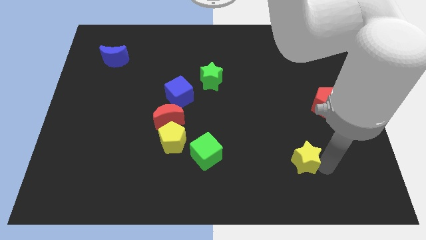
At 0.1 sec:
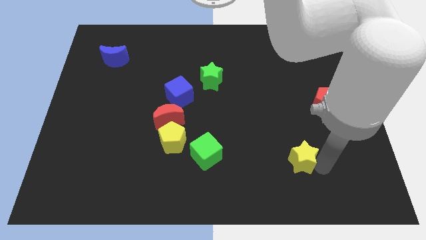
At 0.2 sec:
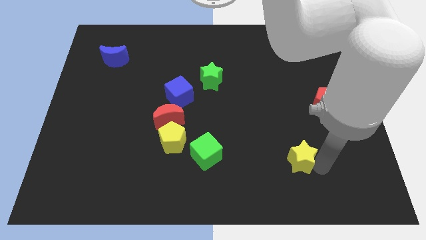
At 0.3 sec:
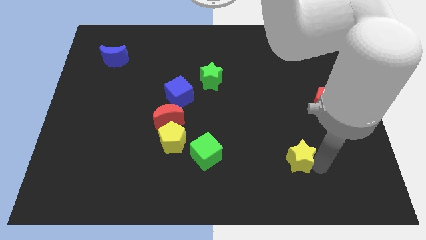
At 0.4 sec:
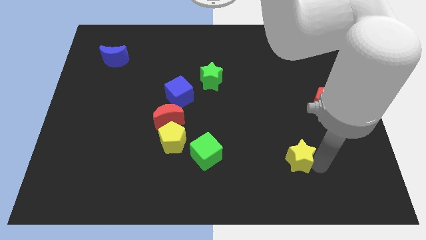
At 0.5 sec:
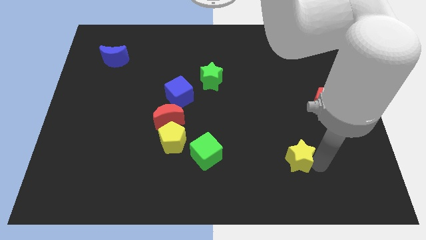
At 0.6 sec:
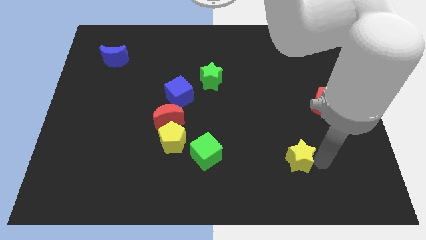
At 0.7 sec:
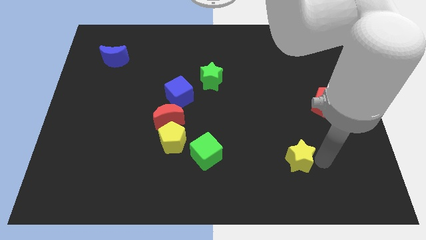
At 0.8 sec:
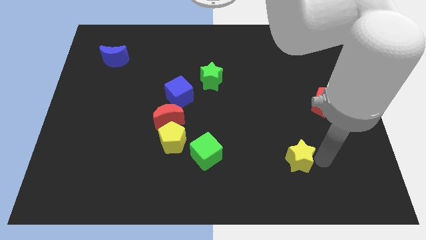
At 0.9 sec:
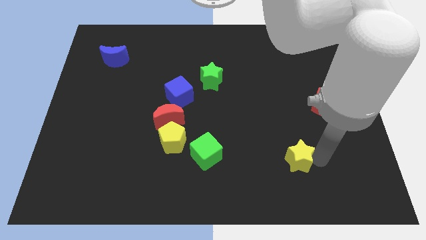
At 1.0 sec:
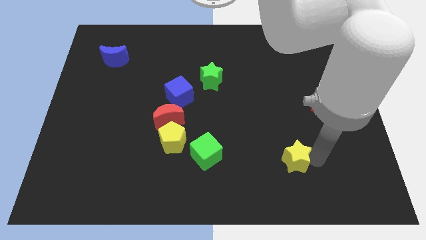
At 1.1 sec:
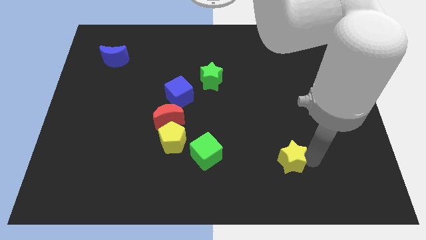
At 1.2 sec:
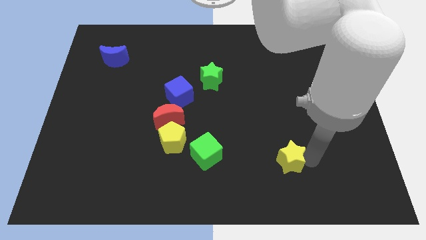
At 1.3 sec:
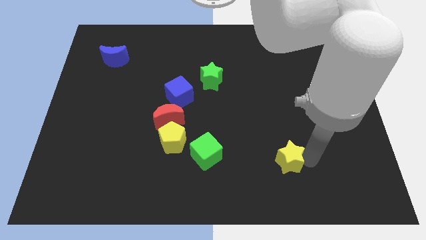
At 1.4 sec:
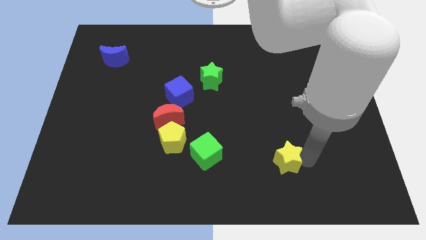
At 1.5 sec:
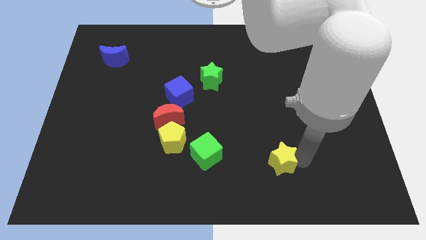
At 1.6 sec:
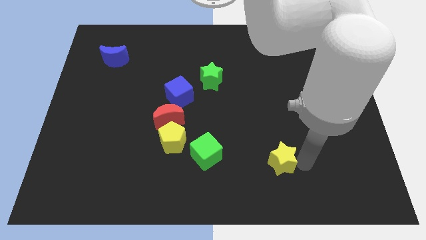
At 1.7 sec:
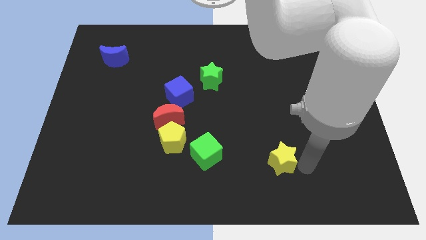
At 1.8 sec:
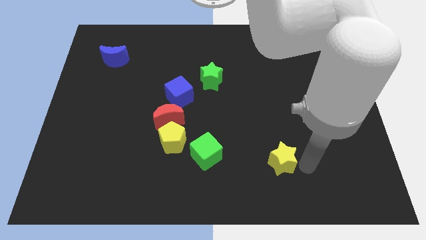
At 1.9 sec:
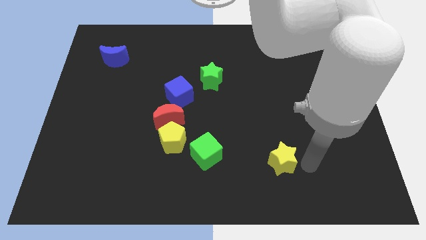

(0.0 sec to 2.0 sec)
drag the yellow star towards the green cube

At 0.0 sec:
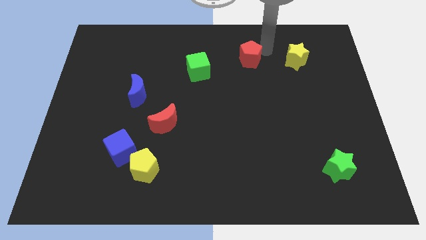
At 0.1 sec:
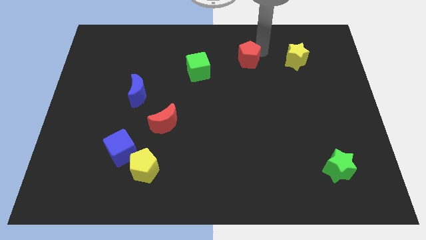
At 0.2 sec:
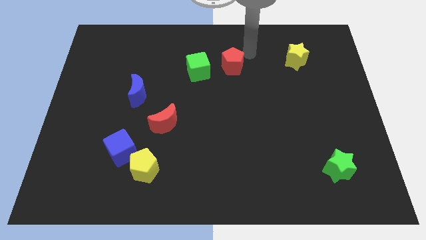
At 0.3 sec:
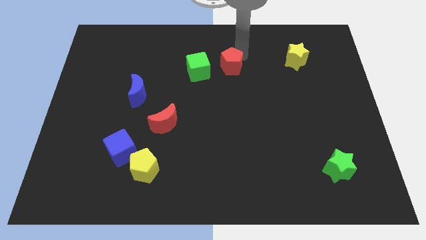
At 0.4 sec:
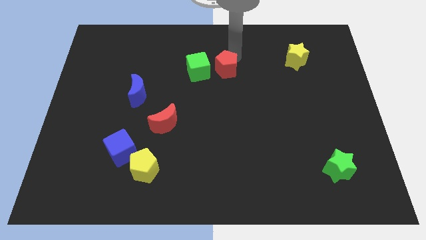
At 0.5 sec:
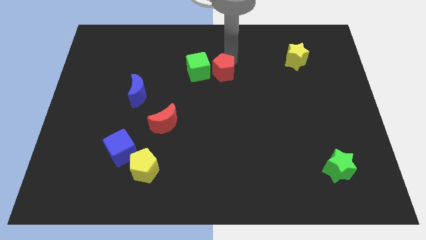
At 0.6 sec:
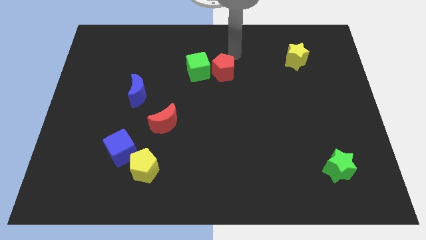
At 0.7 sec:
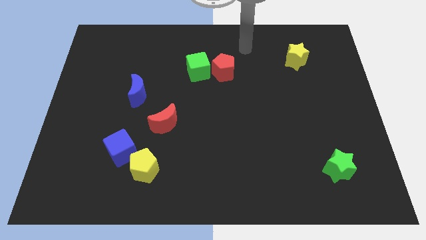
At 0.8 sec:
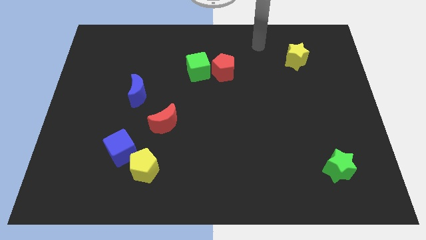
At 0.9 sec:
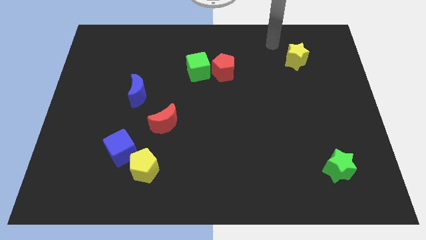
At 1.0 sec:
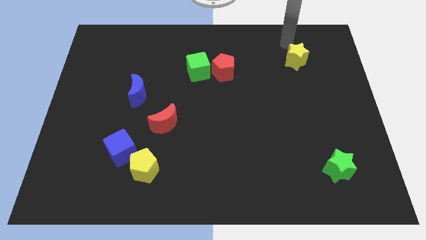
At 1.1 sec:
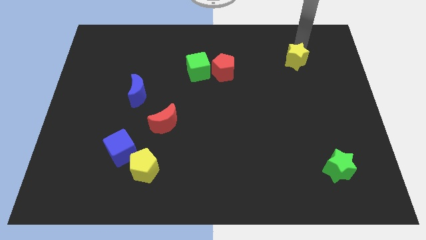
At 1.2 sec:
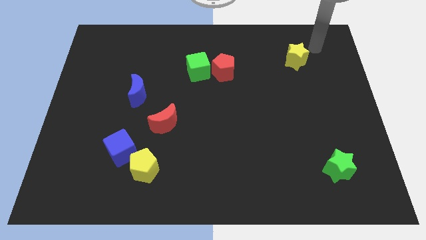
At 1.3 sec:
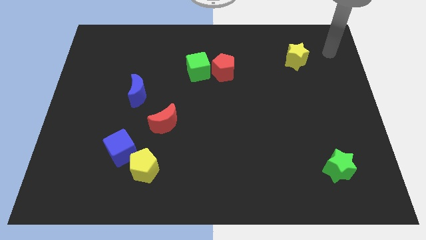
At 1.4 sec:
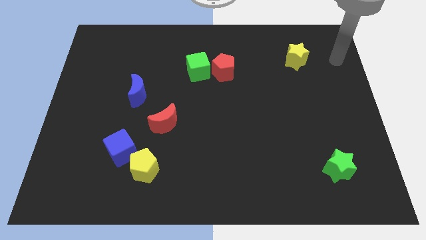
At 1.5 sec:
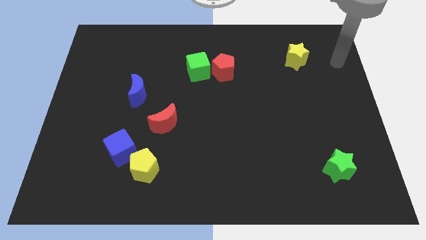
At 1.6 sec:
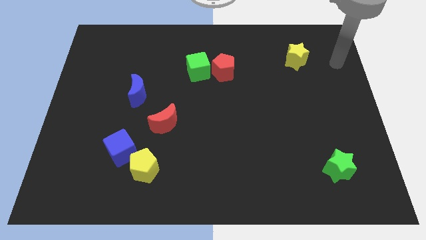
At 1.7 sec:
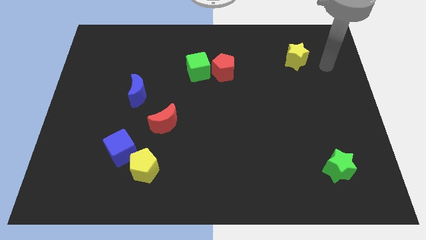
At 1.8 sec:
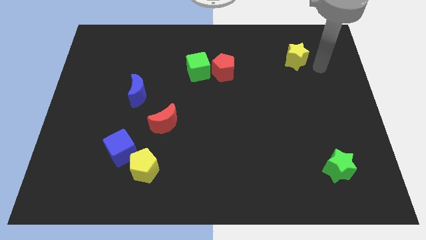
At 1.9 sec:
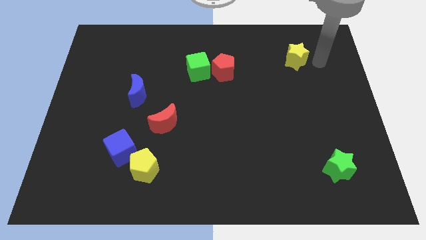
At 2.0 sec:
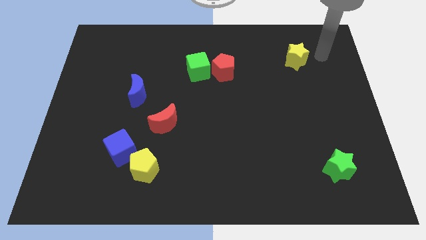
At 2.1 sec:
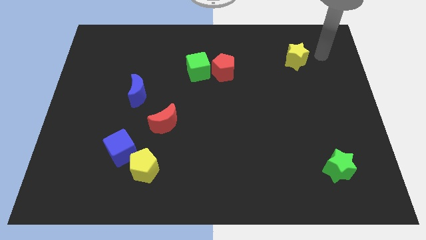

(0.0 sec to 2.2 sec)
move your arm towards the right side of the yellow star

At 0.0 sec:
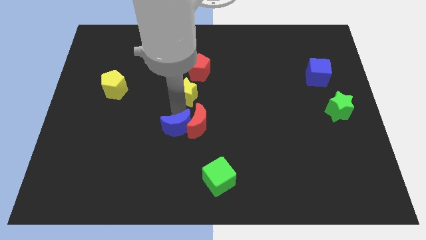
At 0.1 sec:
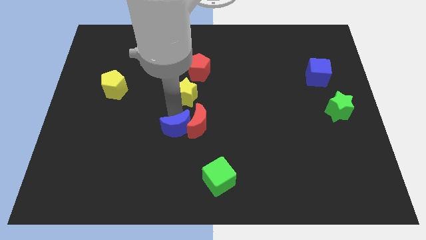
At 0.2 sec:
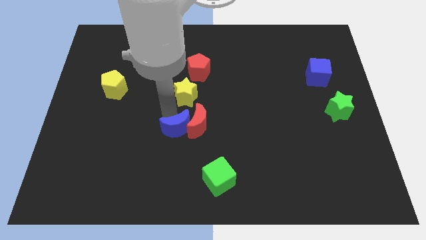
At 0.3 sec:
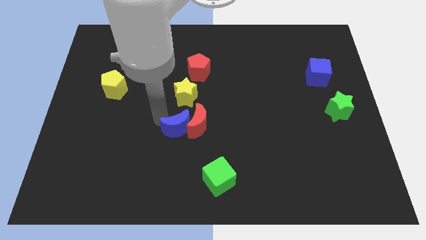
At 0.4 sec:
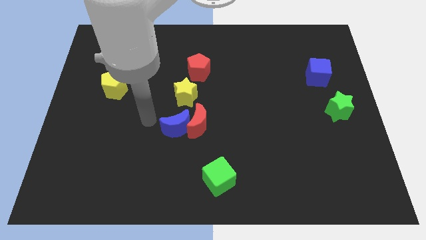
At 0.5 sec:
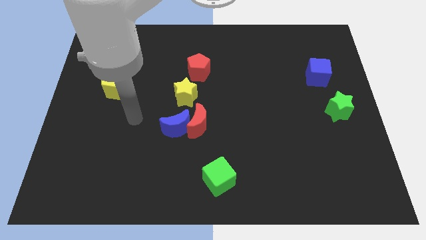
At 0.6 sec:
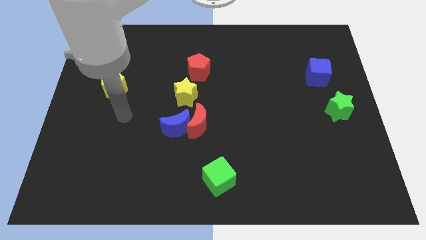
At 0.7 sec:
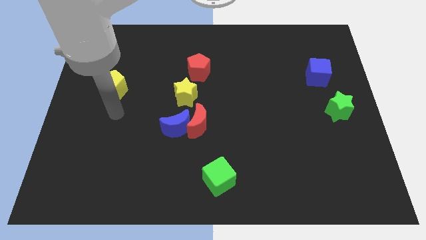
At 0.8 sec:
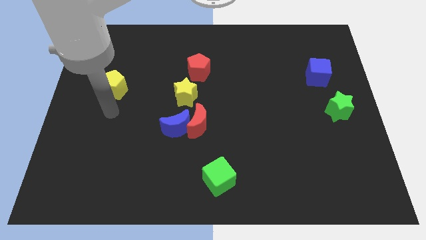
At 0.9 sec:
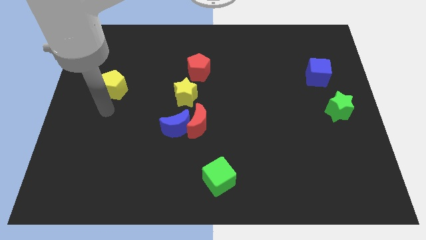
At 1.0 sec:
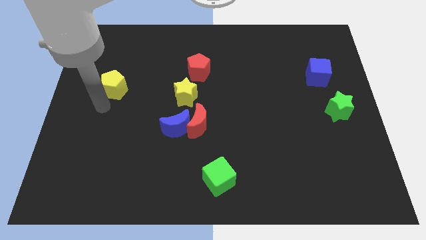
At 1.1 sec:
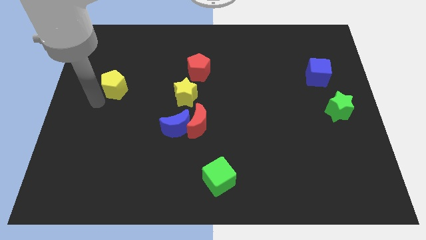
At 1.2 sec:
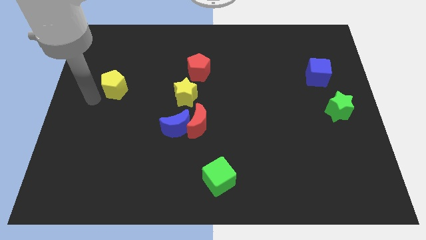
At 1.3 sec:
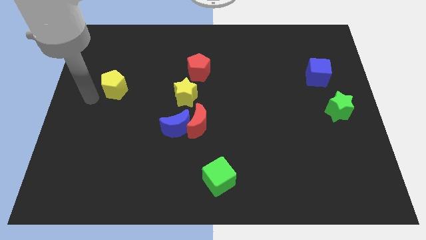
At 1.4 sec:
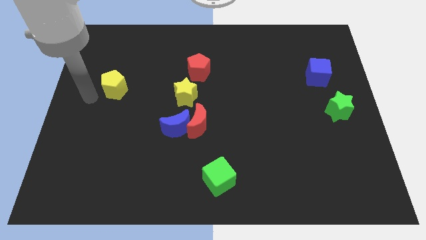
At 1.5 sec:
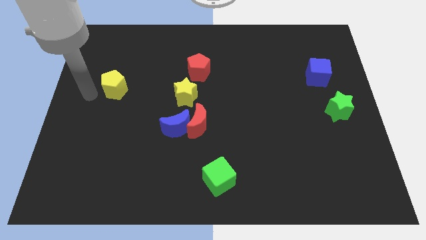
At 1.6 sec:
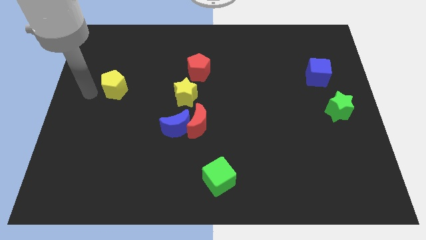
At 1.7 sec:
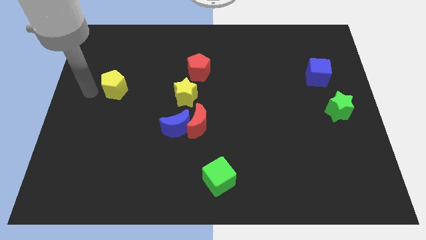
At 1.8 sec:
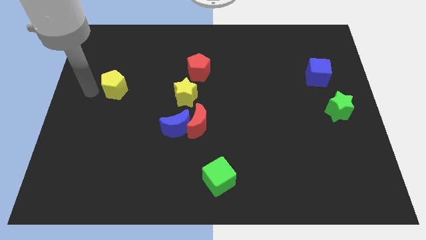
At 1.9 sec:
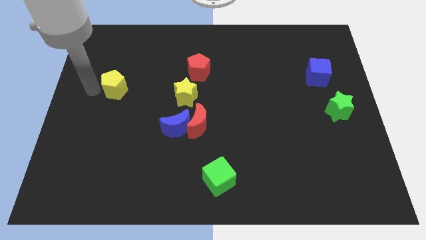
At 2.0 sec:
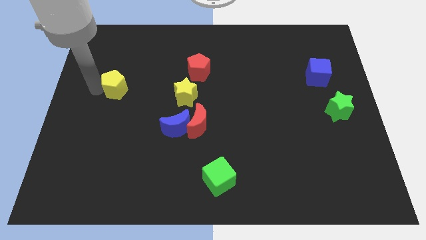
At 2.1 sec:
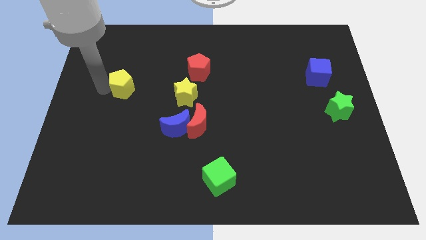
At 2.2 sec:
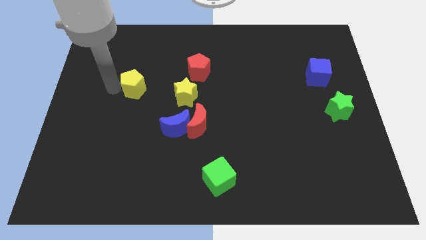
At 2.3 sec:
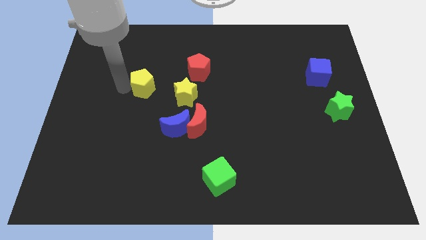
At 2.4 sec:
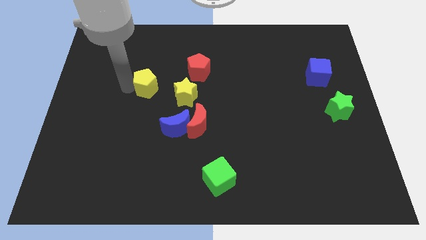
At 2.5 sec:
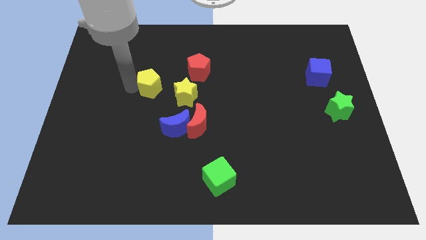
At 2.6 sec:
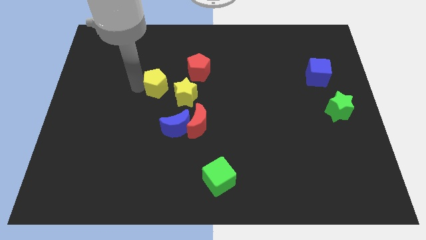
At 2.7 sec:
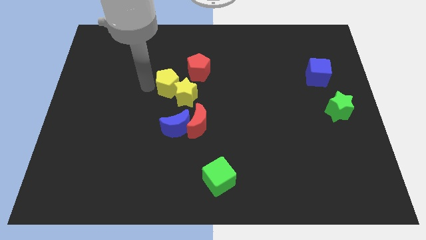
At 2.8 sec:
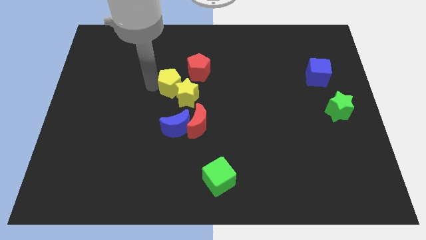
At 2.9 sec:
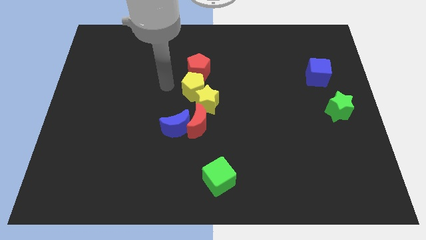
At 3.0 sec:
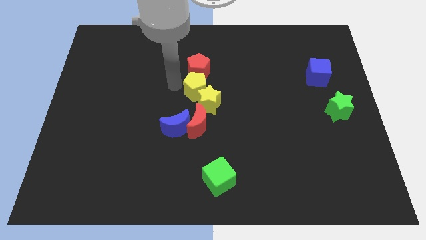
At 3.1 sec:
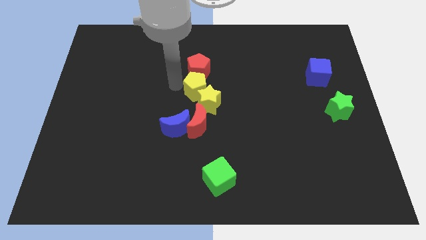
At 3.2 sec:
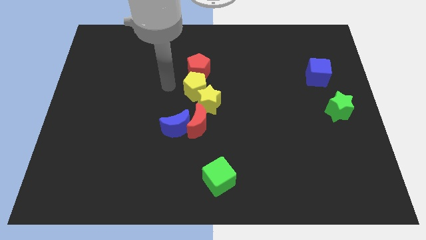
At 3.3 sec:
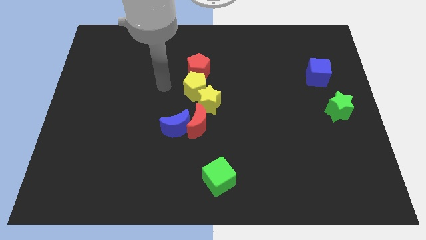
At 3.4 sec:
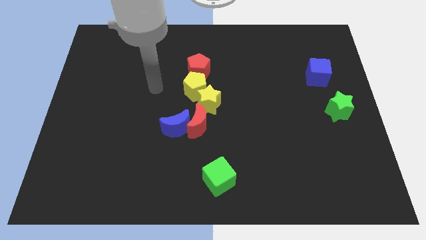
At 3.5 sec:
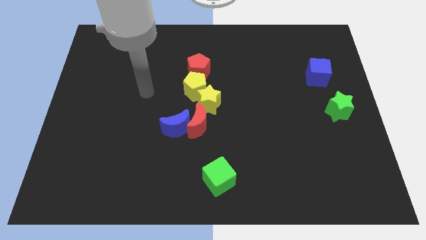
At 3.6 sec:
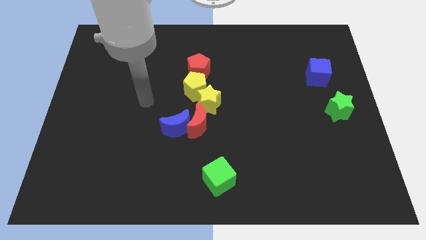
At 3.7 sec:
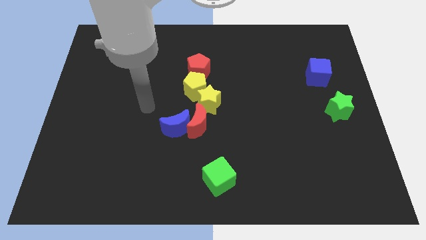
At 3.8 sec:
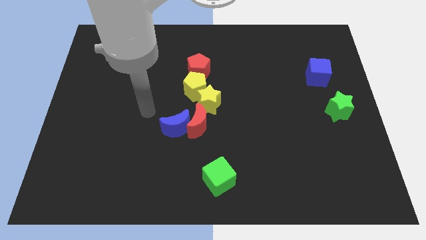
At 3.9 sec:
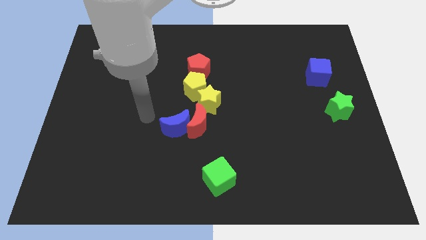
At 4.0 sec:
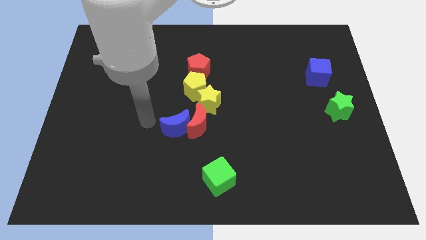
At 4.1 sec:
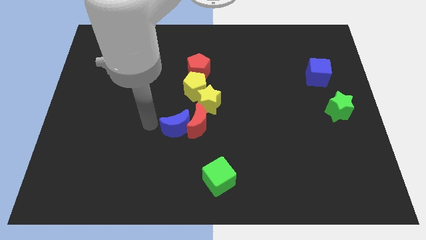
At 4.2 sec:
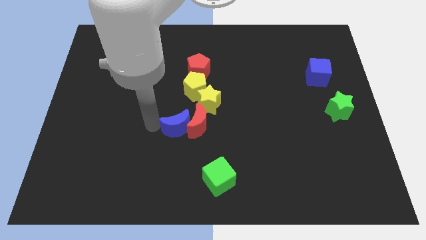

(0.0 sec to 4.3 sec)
push the yellow pentagon into the yellow star to the center of the board

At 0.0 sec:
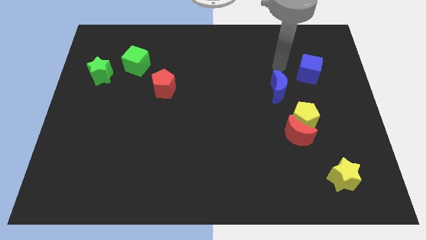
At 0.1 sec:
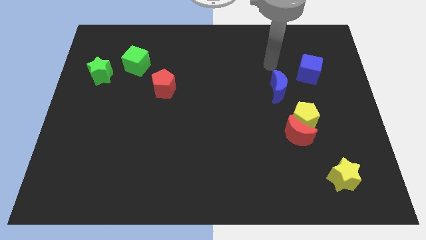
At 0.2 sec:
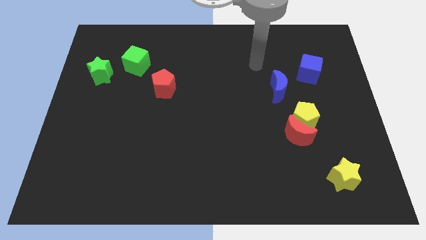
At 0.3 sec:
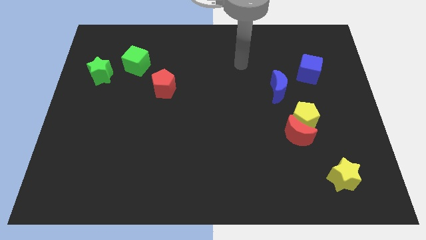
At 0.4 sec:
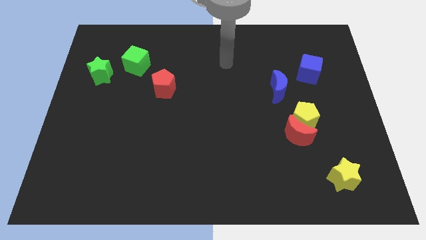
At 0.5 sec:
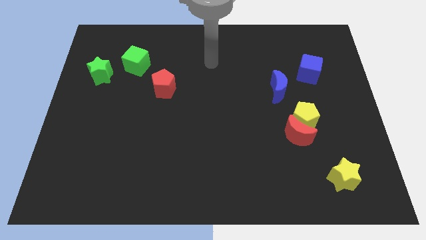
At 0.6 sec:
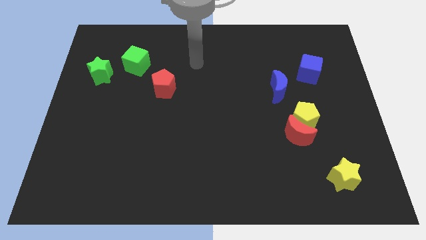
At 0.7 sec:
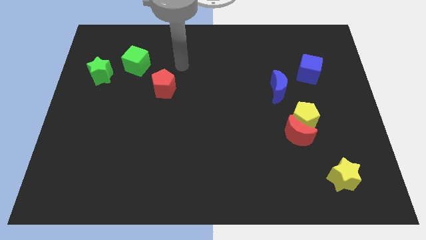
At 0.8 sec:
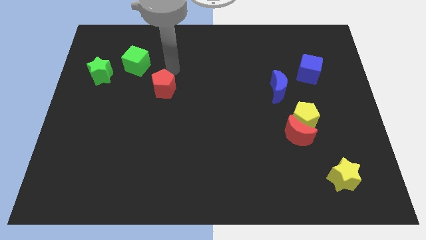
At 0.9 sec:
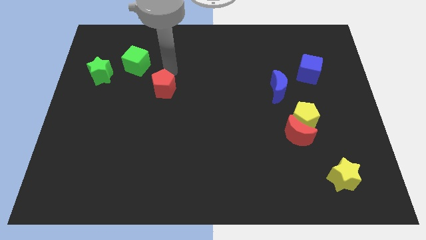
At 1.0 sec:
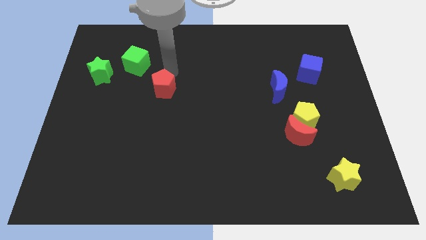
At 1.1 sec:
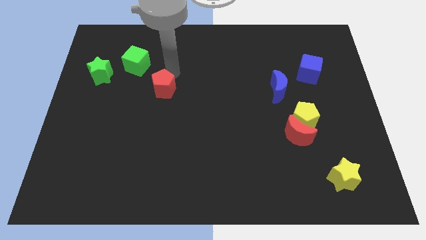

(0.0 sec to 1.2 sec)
point your arm at the top side of the red pentagon
